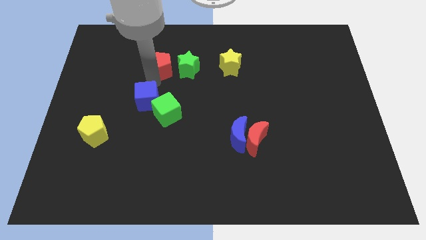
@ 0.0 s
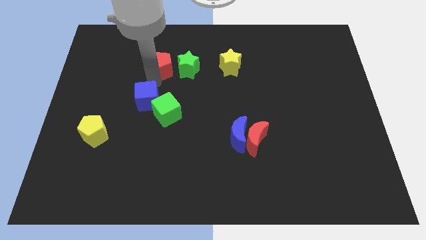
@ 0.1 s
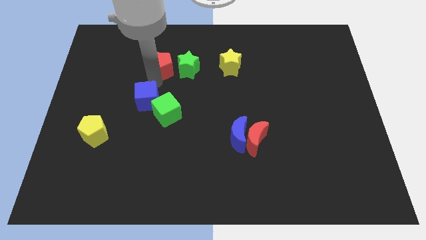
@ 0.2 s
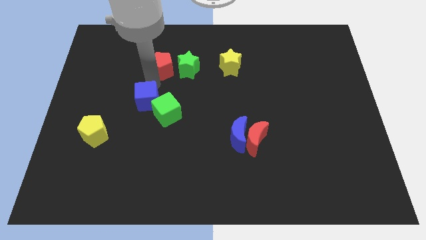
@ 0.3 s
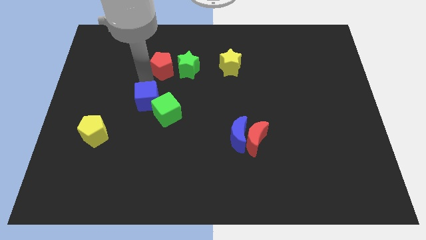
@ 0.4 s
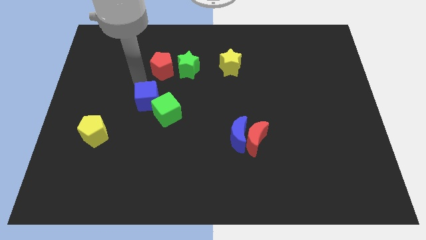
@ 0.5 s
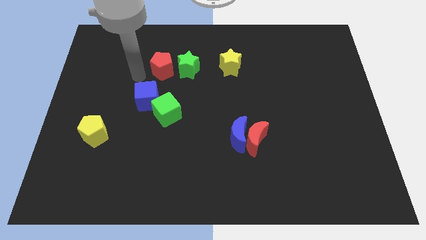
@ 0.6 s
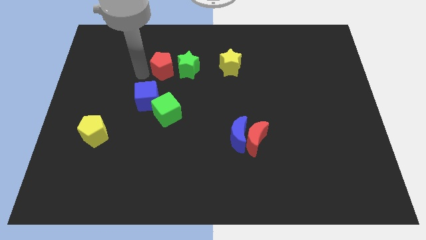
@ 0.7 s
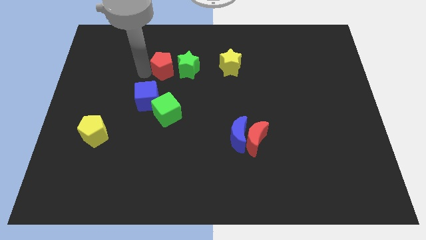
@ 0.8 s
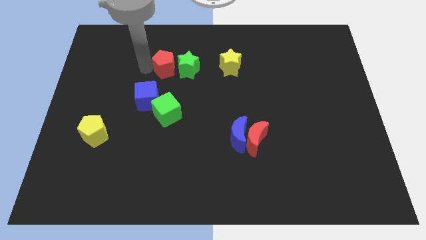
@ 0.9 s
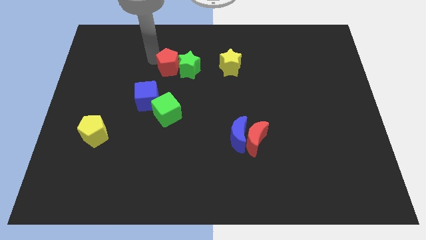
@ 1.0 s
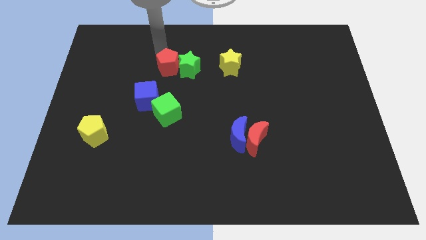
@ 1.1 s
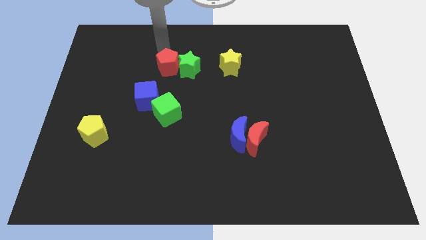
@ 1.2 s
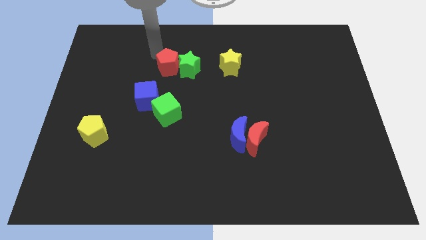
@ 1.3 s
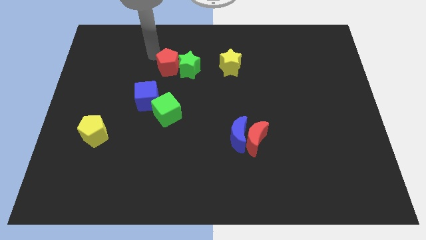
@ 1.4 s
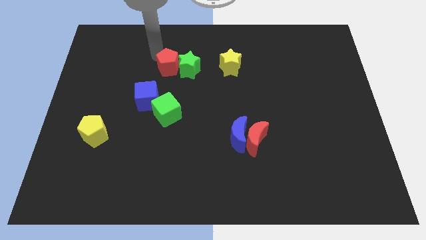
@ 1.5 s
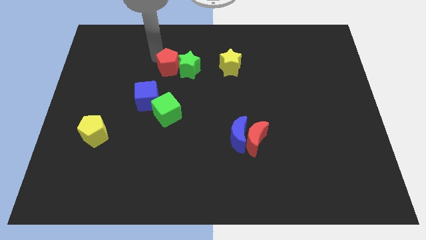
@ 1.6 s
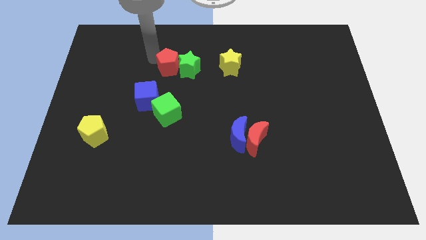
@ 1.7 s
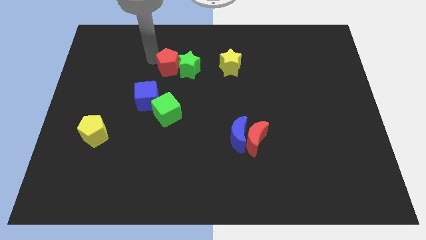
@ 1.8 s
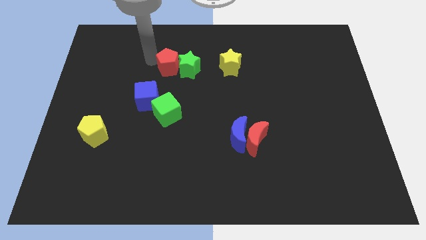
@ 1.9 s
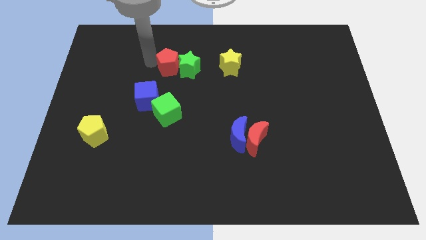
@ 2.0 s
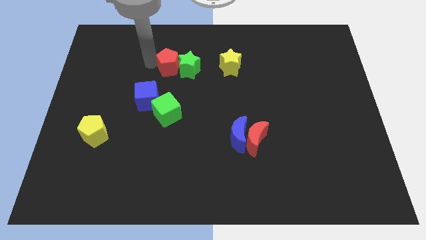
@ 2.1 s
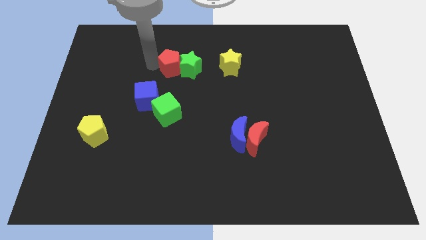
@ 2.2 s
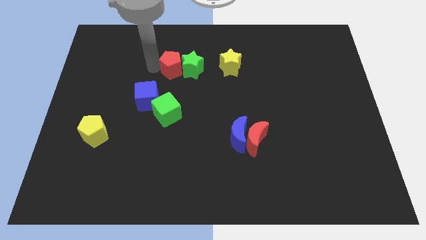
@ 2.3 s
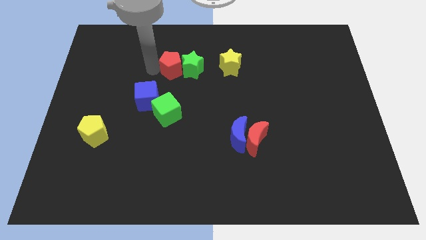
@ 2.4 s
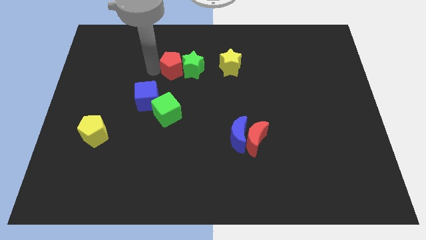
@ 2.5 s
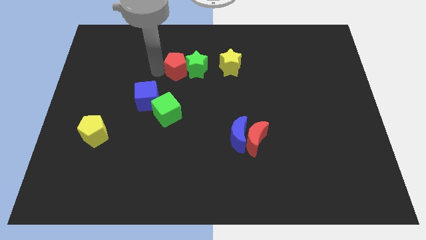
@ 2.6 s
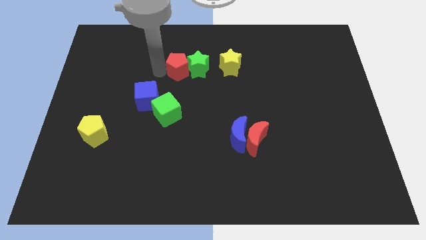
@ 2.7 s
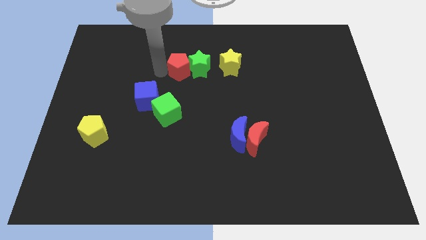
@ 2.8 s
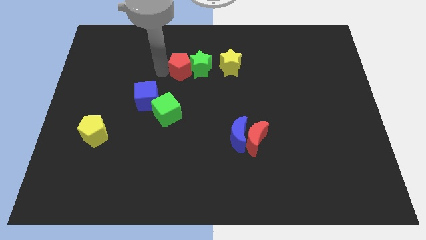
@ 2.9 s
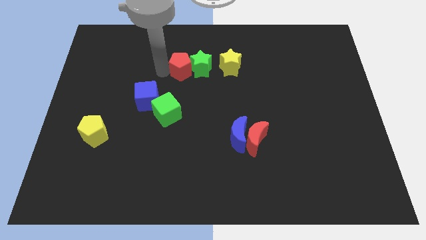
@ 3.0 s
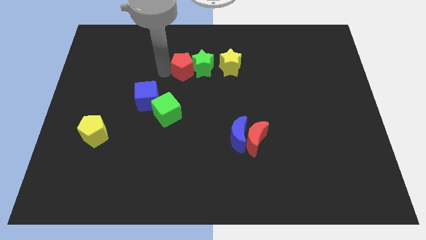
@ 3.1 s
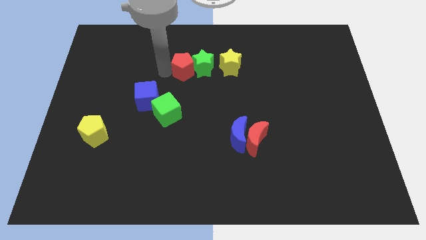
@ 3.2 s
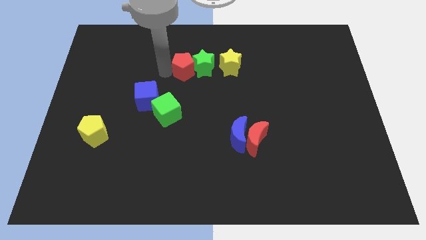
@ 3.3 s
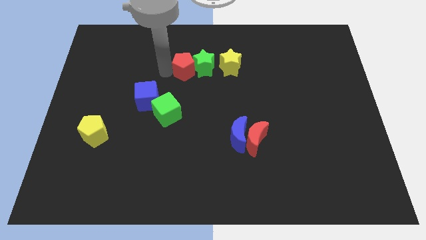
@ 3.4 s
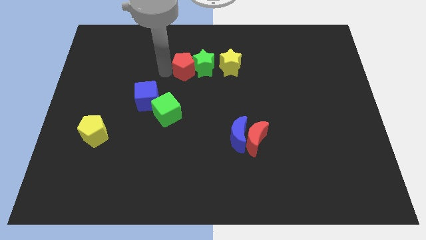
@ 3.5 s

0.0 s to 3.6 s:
move the green star and red pentagon slightly right

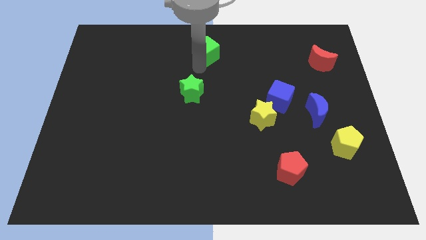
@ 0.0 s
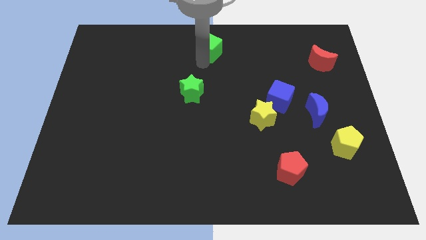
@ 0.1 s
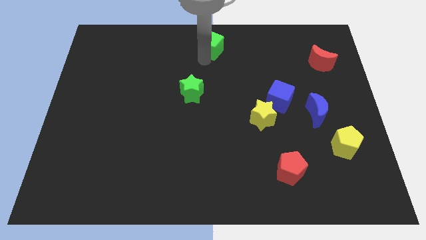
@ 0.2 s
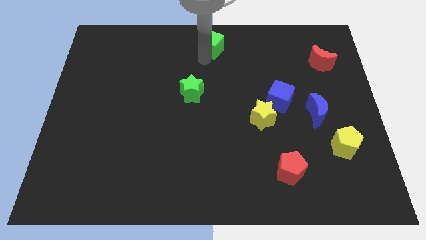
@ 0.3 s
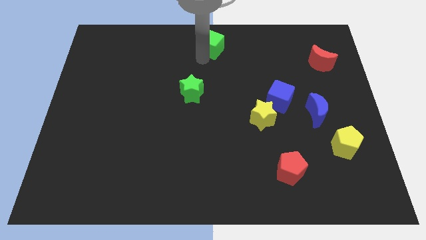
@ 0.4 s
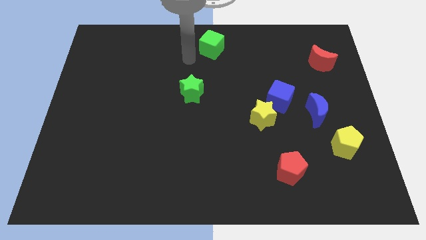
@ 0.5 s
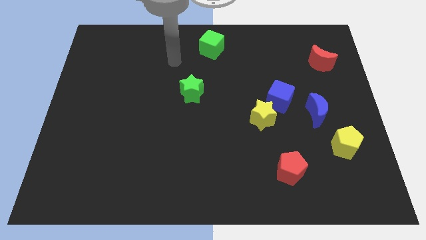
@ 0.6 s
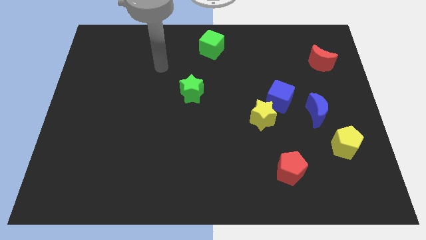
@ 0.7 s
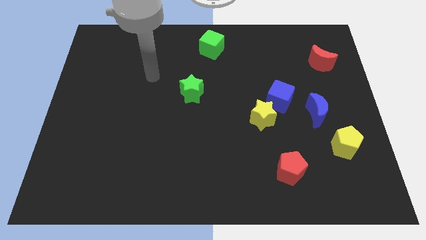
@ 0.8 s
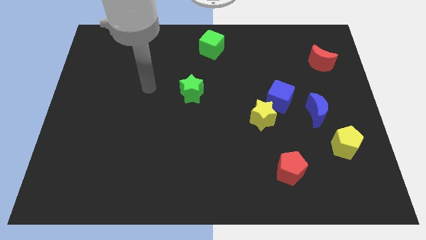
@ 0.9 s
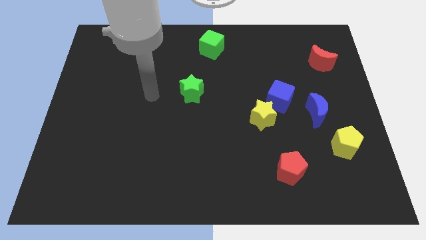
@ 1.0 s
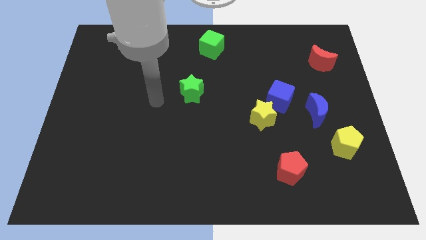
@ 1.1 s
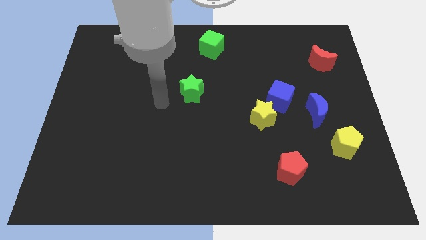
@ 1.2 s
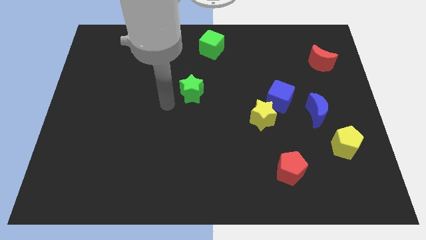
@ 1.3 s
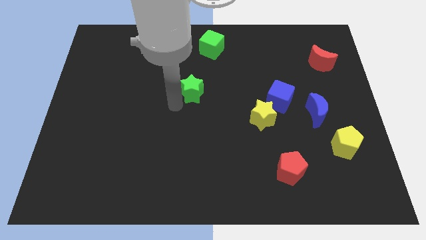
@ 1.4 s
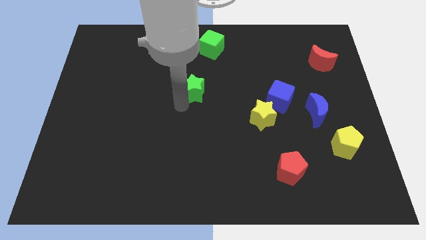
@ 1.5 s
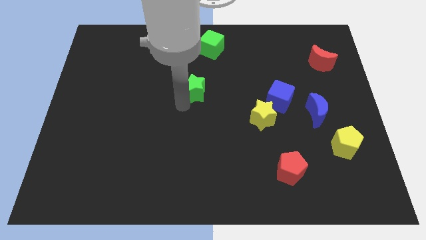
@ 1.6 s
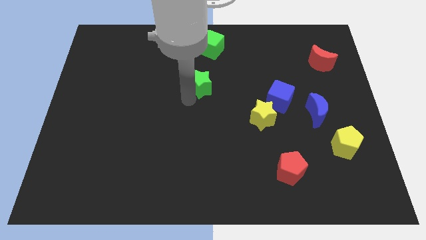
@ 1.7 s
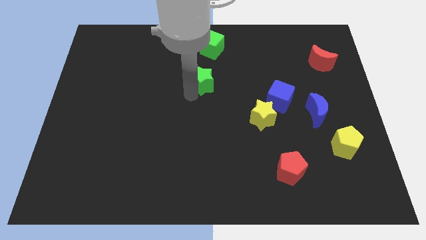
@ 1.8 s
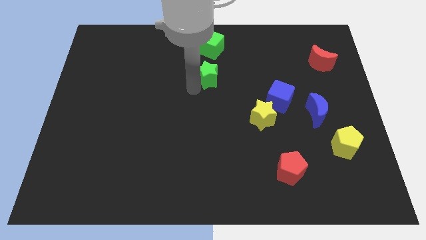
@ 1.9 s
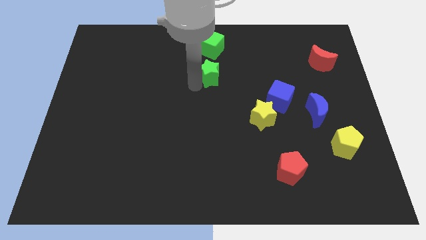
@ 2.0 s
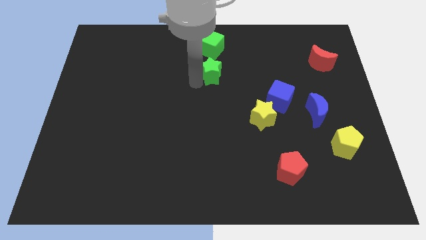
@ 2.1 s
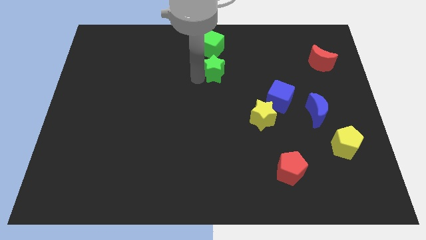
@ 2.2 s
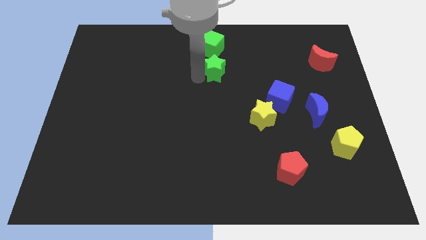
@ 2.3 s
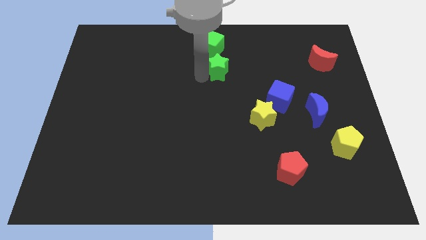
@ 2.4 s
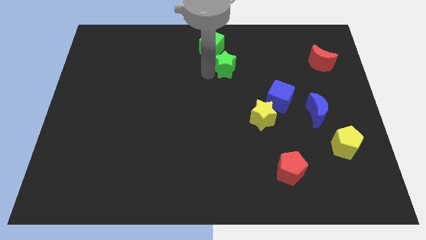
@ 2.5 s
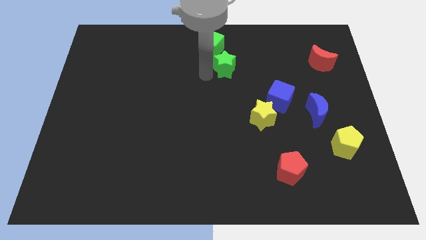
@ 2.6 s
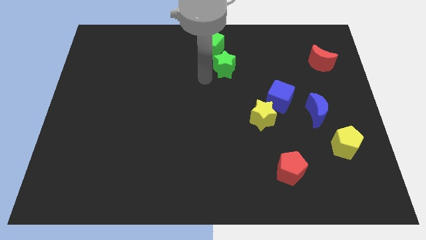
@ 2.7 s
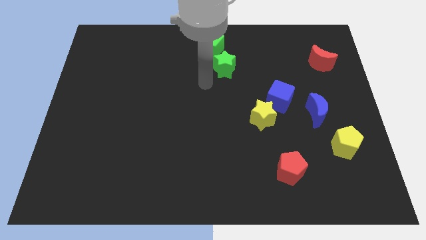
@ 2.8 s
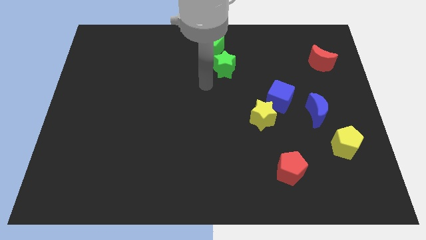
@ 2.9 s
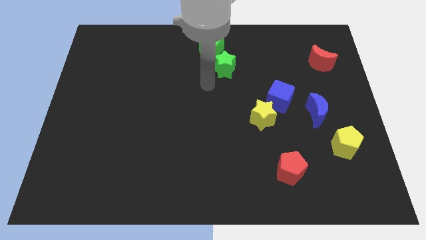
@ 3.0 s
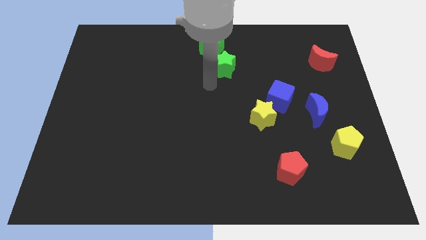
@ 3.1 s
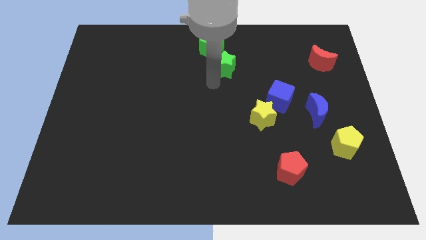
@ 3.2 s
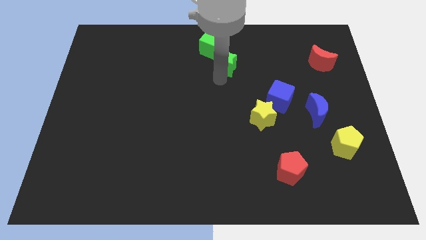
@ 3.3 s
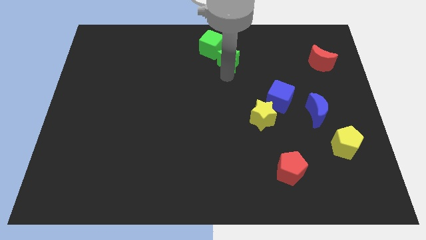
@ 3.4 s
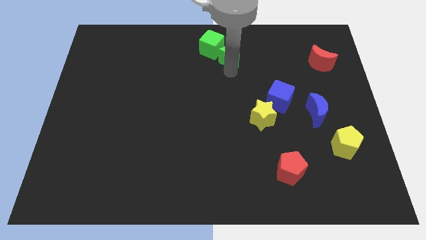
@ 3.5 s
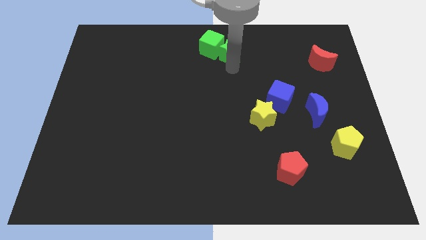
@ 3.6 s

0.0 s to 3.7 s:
move green blocks to center top

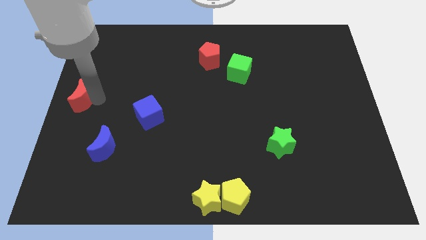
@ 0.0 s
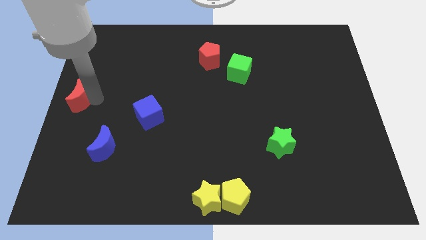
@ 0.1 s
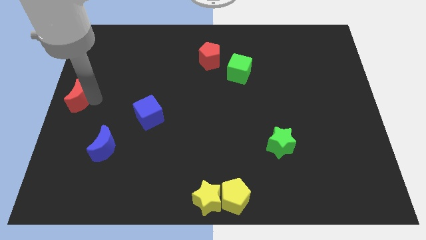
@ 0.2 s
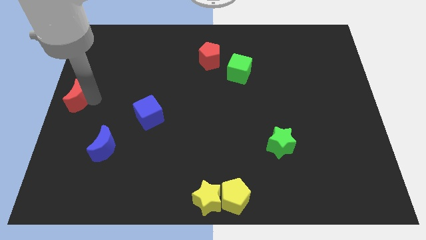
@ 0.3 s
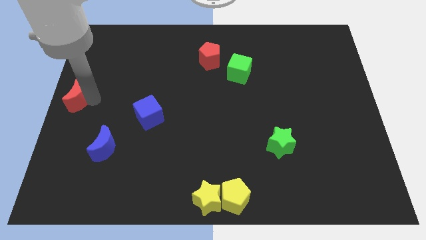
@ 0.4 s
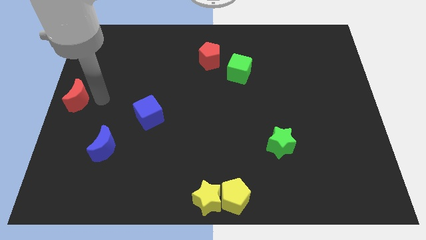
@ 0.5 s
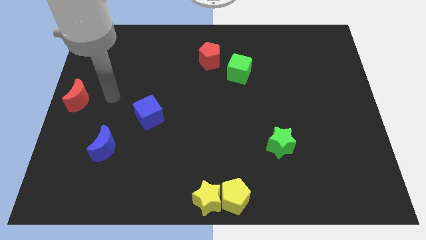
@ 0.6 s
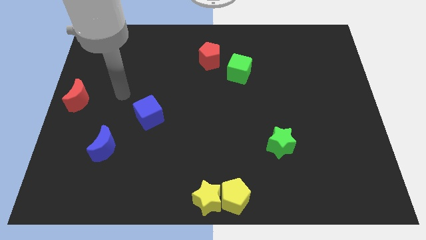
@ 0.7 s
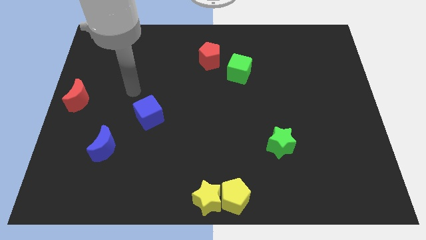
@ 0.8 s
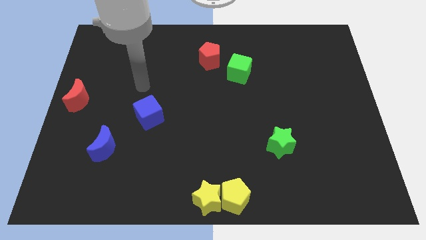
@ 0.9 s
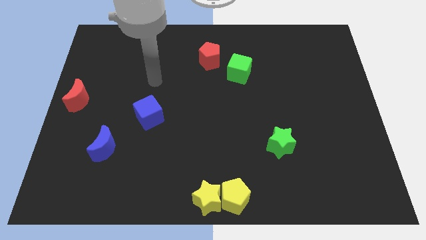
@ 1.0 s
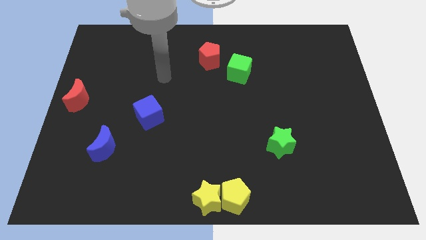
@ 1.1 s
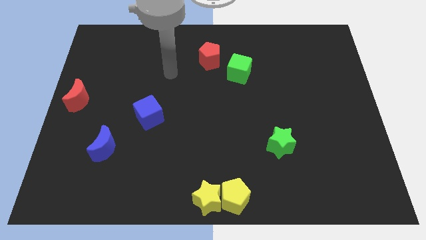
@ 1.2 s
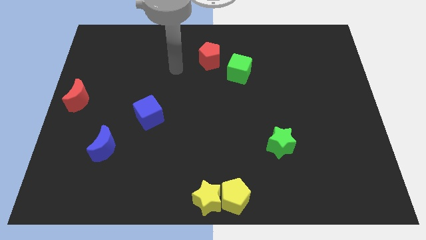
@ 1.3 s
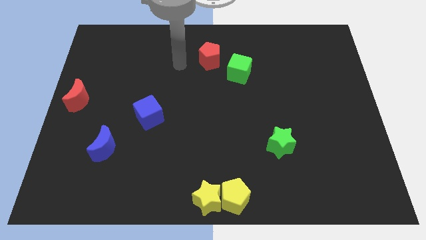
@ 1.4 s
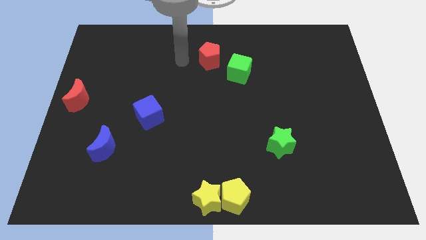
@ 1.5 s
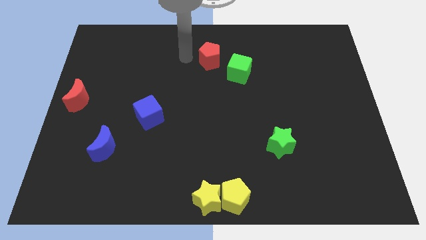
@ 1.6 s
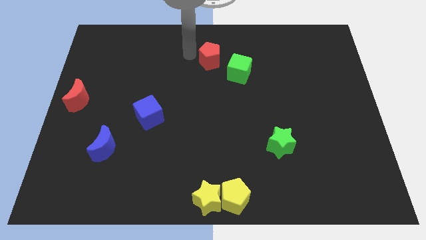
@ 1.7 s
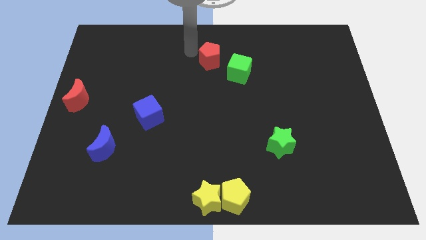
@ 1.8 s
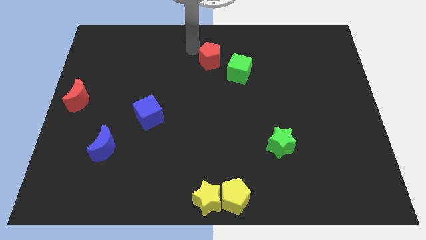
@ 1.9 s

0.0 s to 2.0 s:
place the red moon towards the left center of the board
